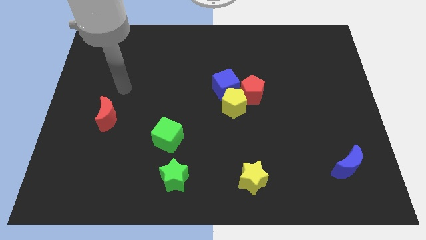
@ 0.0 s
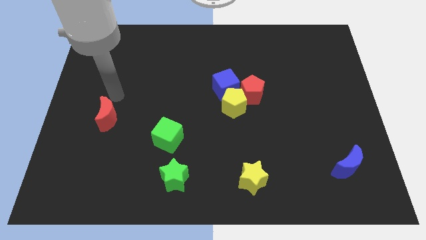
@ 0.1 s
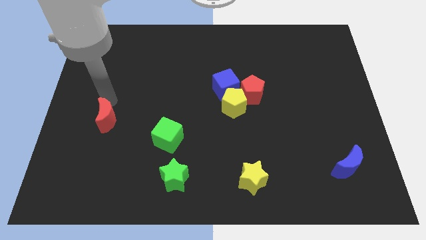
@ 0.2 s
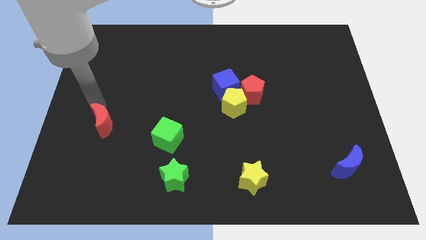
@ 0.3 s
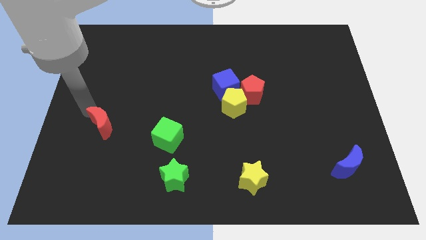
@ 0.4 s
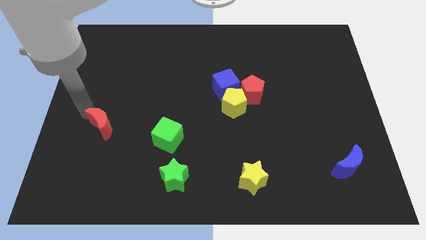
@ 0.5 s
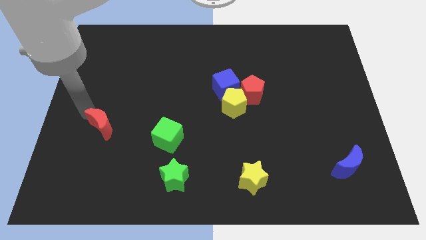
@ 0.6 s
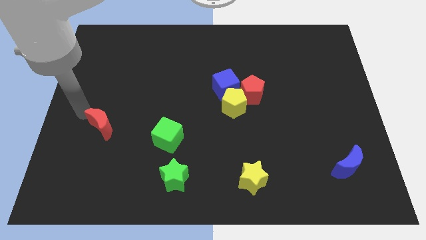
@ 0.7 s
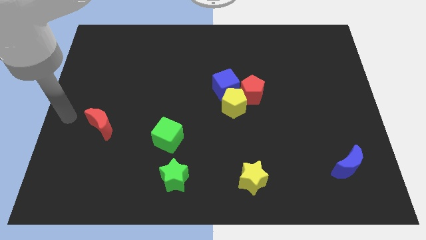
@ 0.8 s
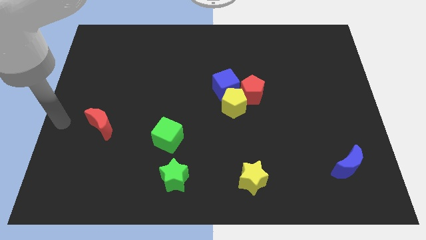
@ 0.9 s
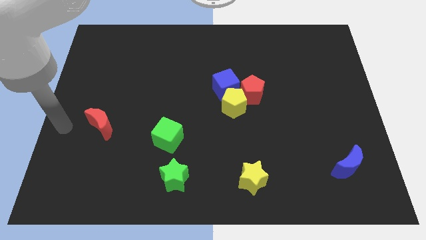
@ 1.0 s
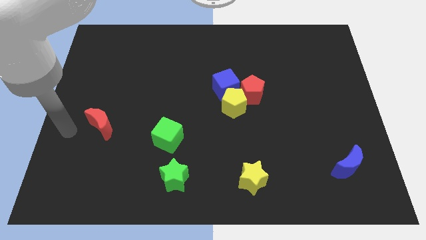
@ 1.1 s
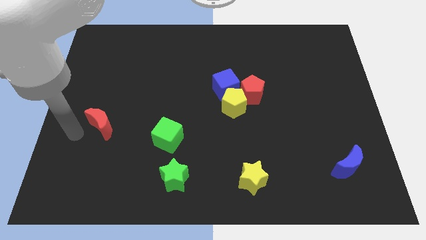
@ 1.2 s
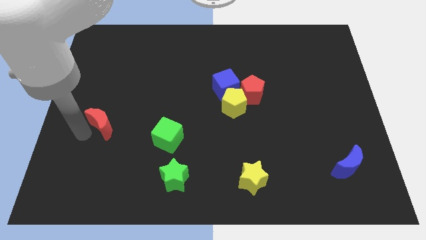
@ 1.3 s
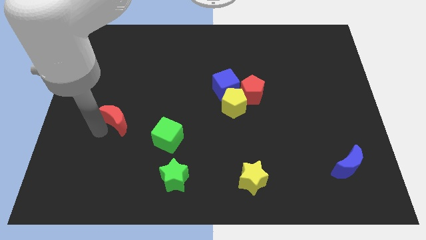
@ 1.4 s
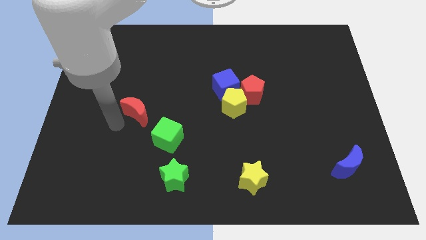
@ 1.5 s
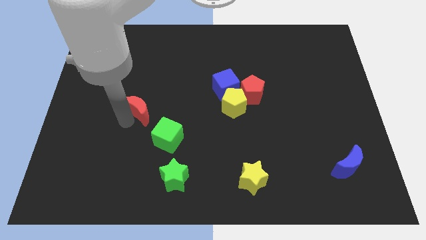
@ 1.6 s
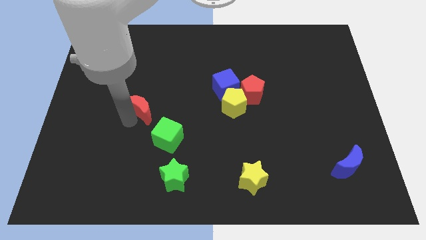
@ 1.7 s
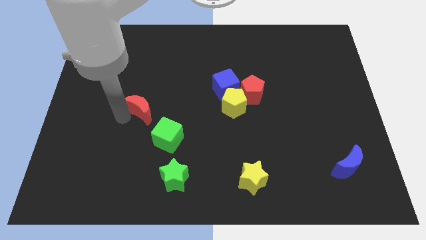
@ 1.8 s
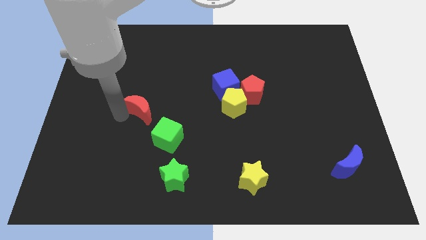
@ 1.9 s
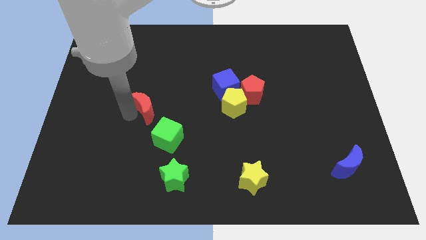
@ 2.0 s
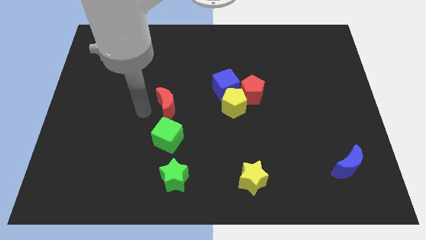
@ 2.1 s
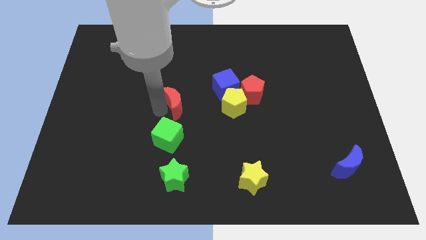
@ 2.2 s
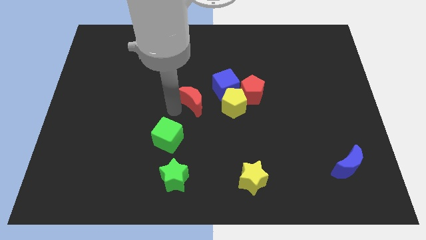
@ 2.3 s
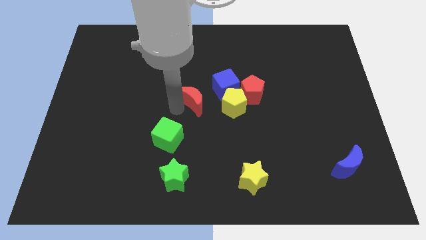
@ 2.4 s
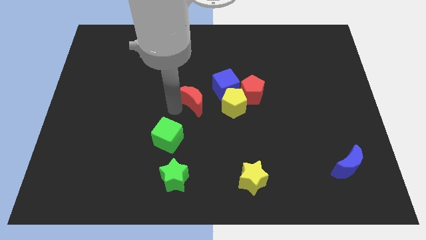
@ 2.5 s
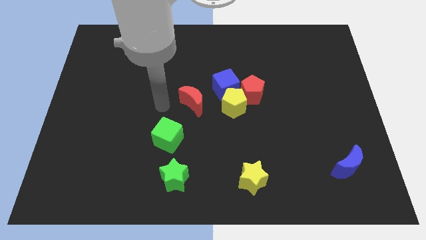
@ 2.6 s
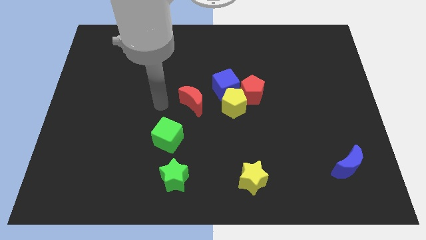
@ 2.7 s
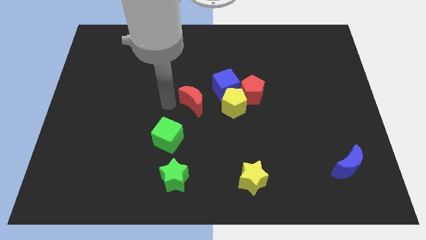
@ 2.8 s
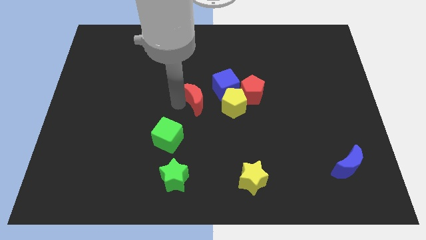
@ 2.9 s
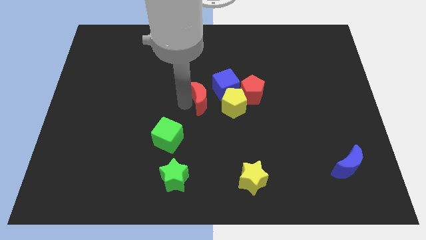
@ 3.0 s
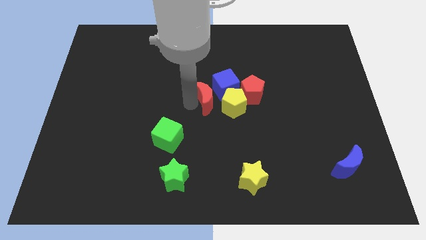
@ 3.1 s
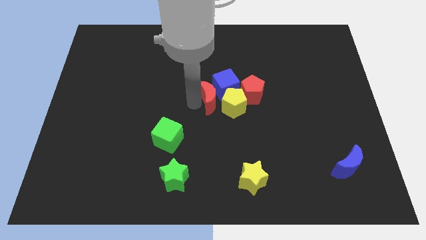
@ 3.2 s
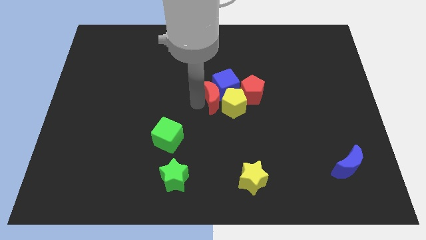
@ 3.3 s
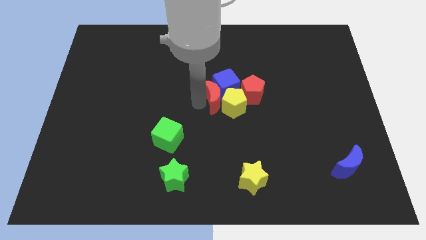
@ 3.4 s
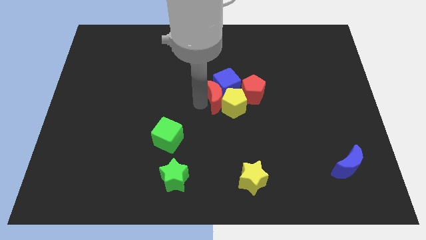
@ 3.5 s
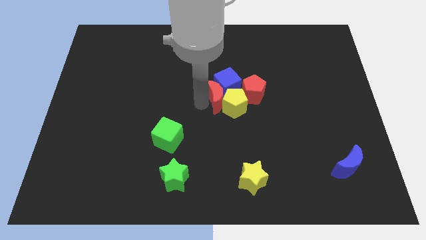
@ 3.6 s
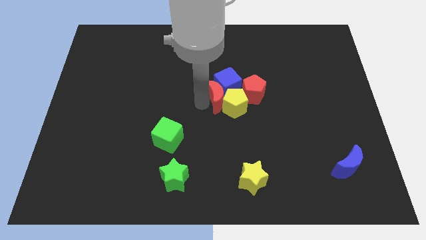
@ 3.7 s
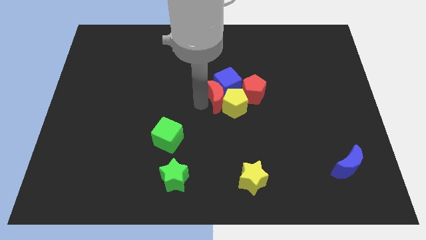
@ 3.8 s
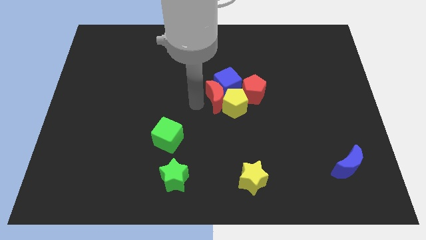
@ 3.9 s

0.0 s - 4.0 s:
move the red crescent into the blue cube

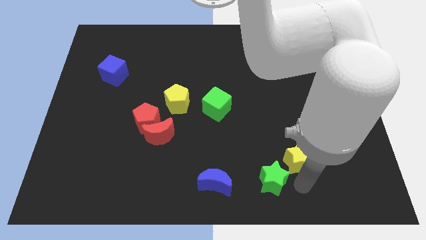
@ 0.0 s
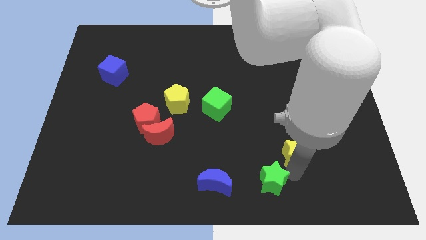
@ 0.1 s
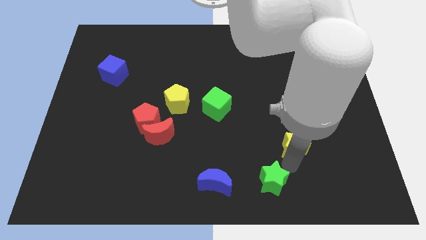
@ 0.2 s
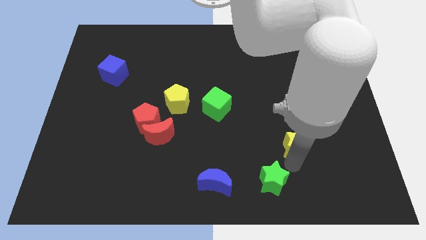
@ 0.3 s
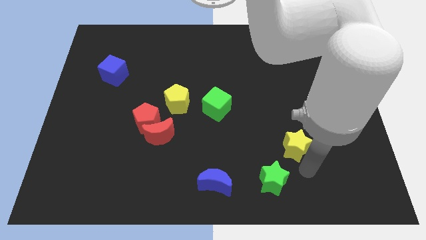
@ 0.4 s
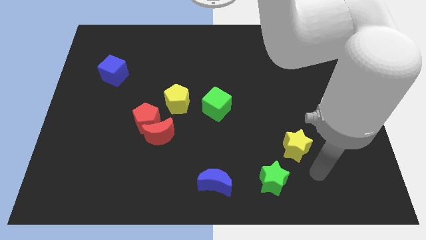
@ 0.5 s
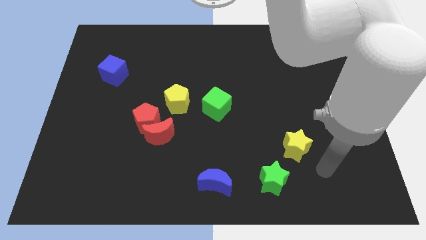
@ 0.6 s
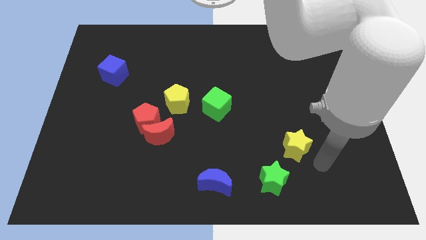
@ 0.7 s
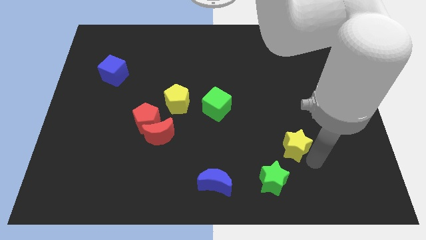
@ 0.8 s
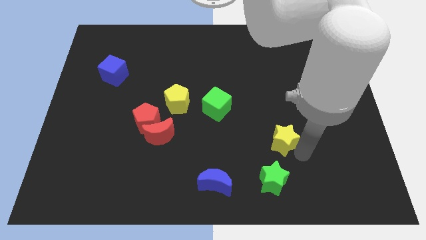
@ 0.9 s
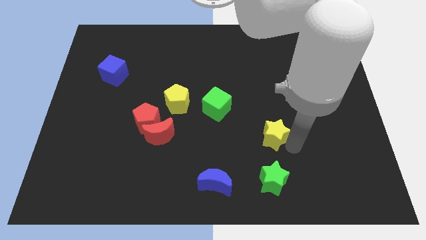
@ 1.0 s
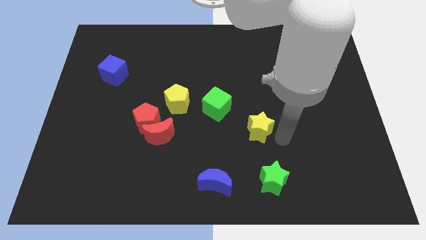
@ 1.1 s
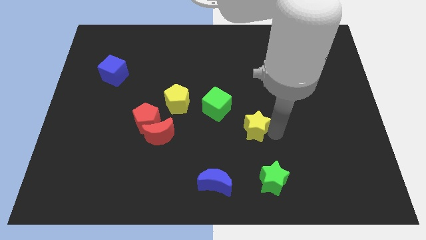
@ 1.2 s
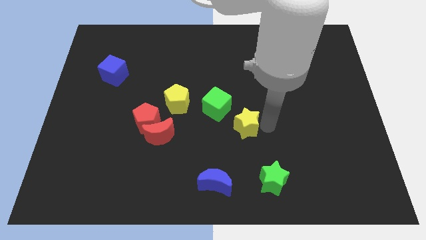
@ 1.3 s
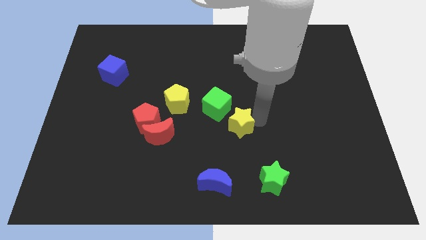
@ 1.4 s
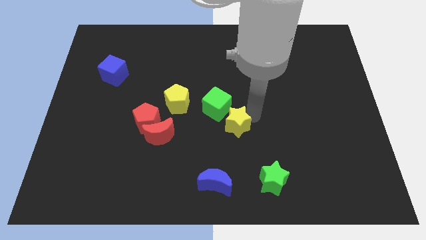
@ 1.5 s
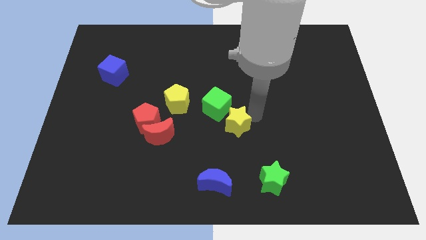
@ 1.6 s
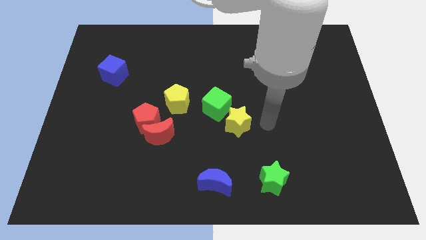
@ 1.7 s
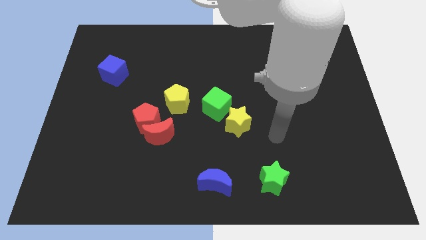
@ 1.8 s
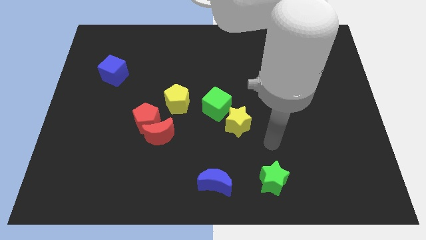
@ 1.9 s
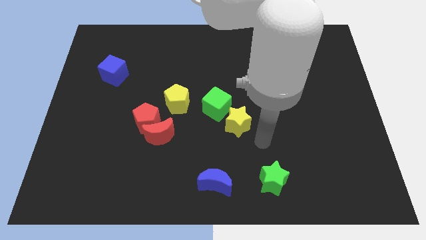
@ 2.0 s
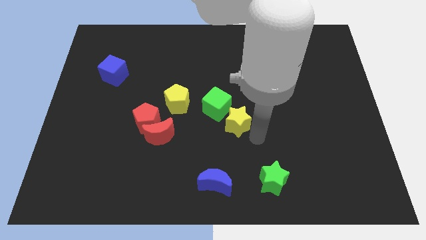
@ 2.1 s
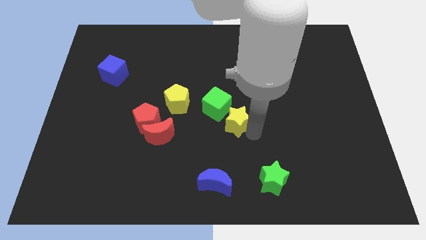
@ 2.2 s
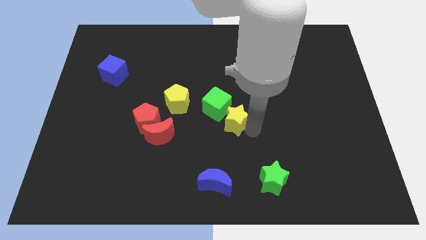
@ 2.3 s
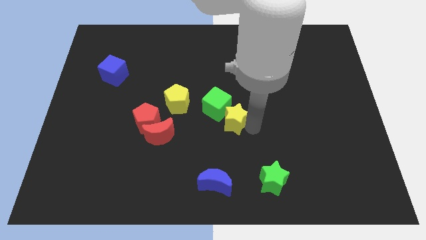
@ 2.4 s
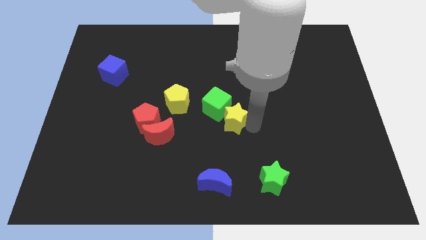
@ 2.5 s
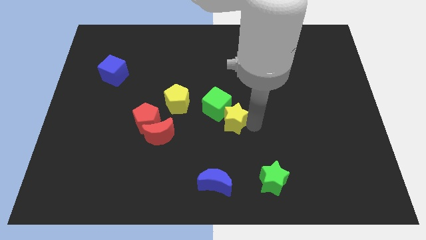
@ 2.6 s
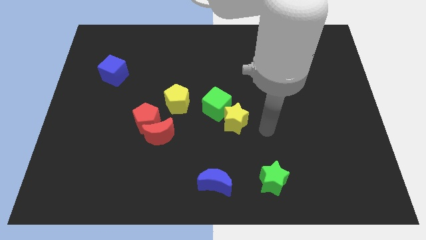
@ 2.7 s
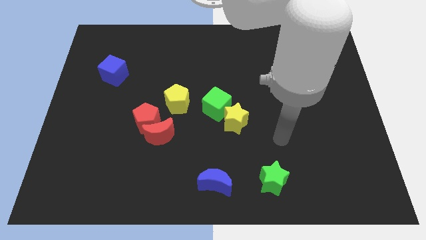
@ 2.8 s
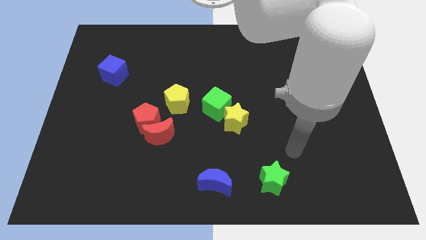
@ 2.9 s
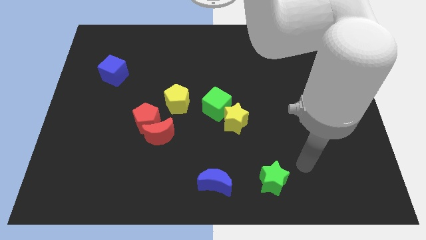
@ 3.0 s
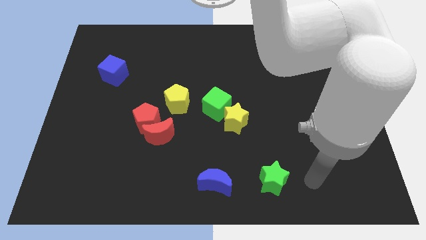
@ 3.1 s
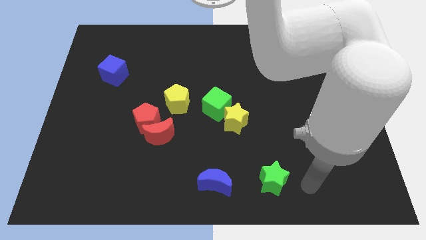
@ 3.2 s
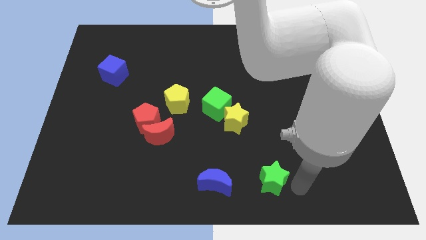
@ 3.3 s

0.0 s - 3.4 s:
place the yellow star to the bottom right side of the green cube

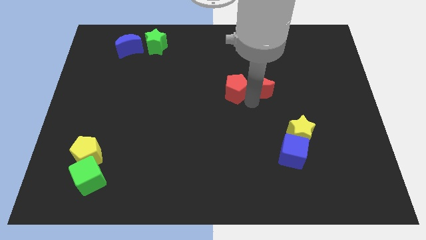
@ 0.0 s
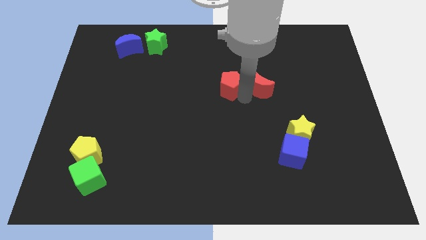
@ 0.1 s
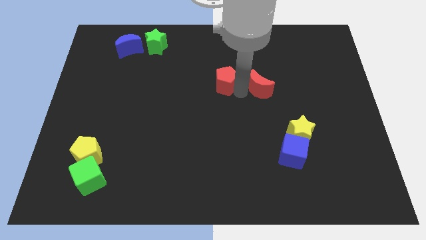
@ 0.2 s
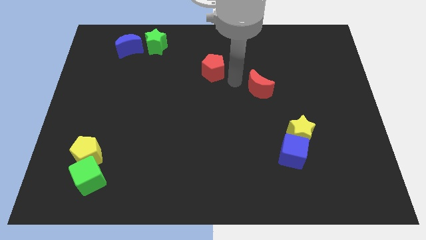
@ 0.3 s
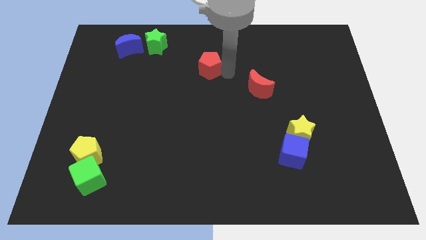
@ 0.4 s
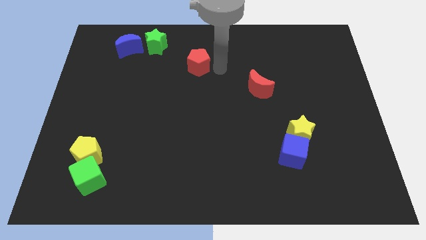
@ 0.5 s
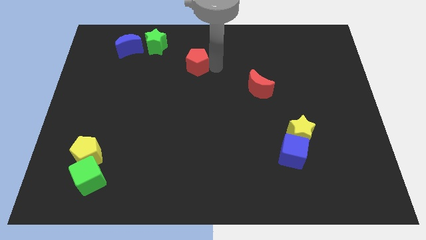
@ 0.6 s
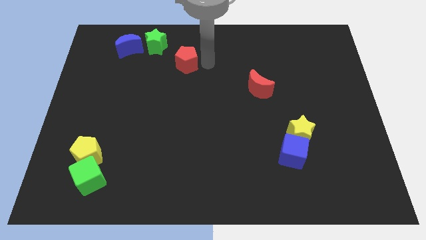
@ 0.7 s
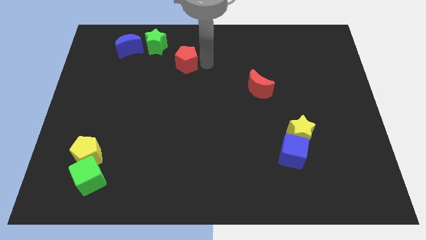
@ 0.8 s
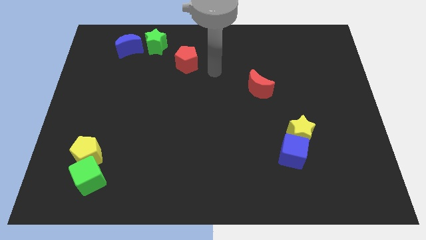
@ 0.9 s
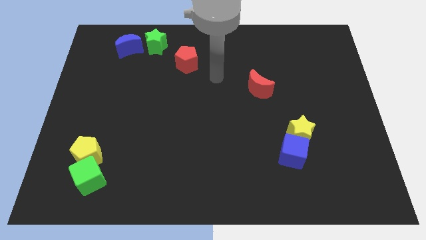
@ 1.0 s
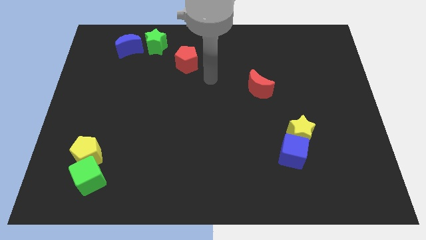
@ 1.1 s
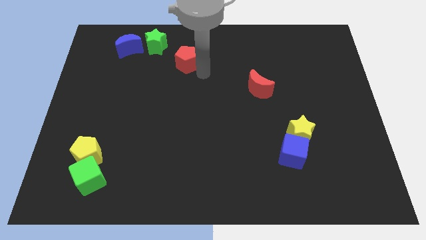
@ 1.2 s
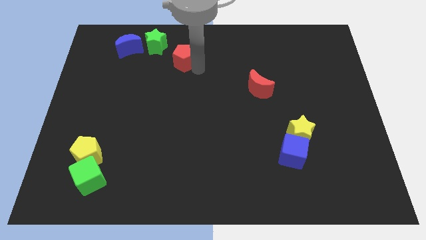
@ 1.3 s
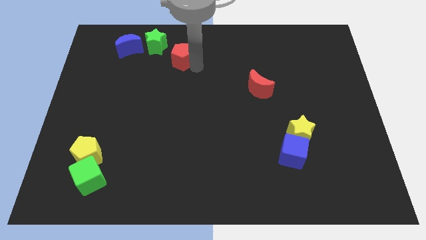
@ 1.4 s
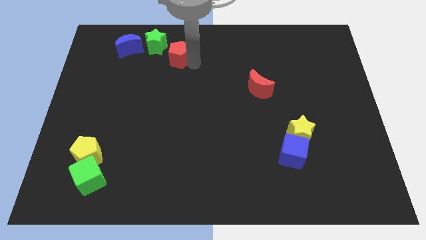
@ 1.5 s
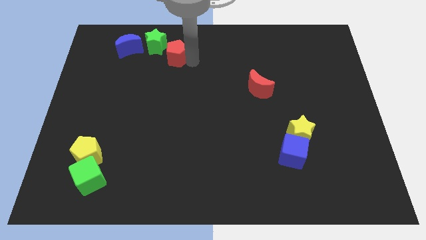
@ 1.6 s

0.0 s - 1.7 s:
drag the red pentagon slightly upwards
